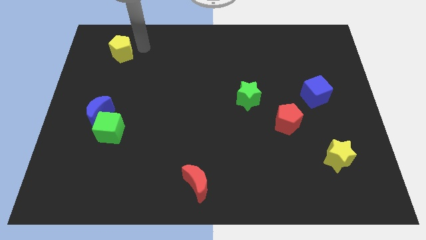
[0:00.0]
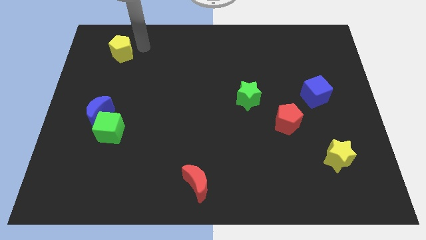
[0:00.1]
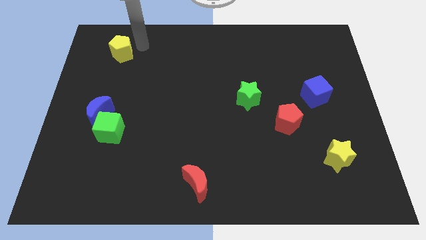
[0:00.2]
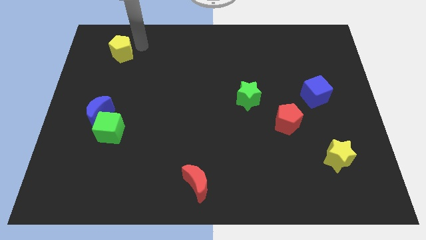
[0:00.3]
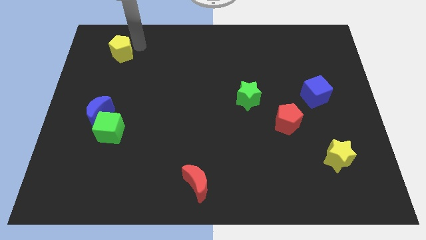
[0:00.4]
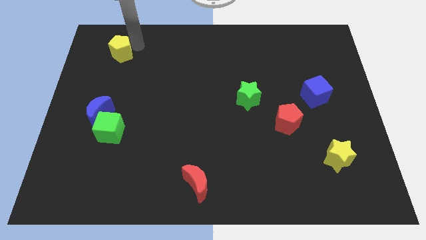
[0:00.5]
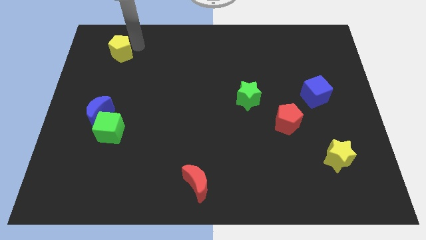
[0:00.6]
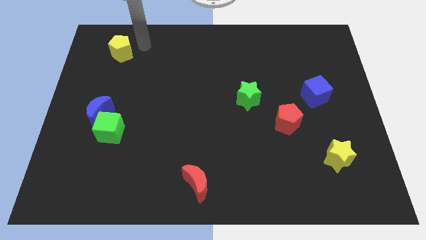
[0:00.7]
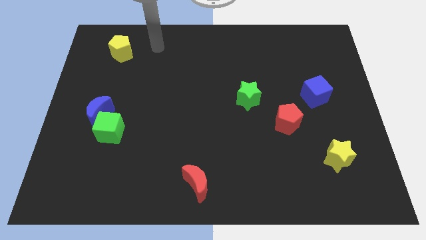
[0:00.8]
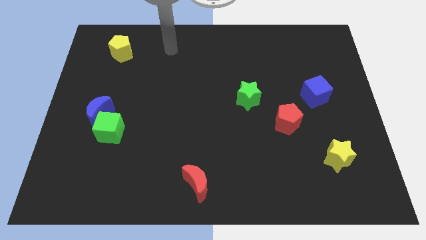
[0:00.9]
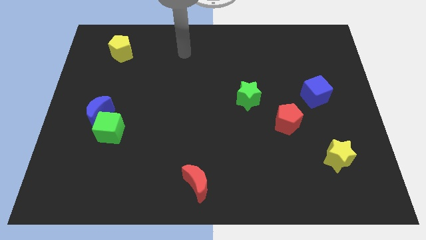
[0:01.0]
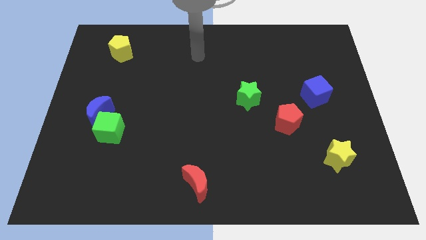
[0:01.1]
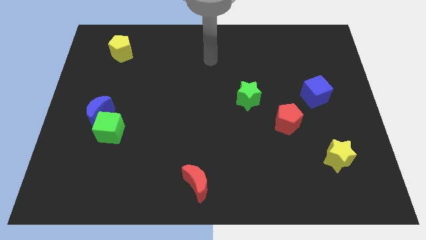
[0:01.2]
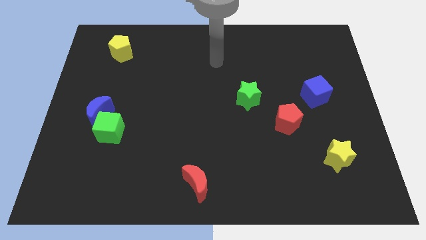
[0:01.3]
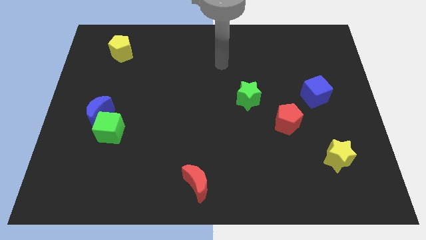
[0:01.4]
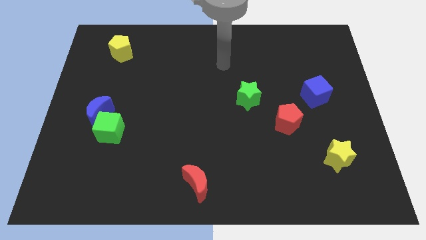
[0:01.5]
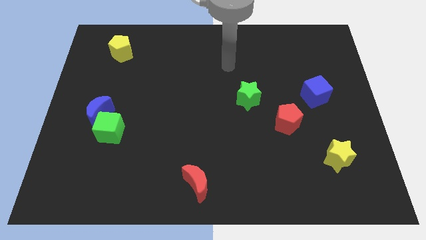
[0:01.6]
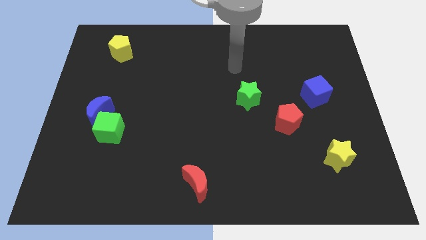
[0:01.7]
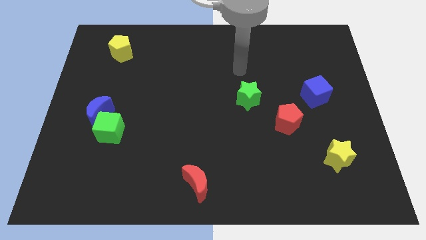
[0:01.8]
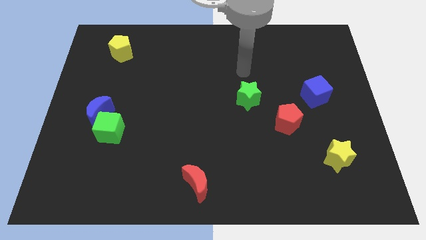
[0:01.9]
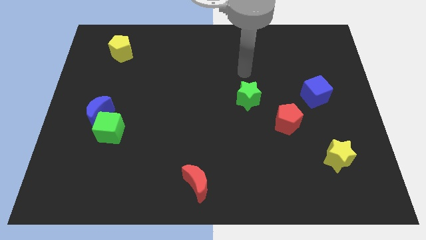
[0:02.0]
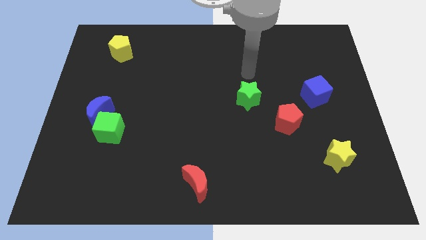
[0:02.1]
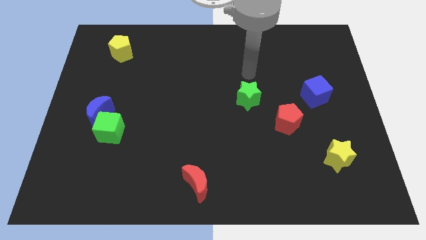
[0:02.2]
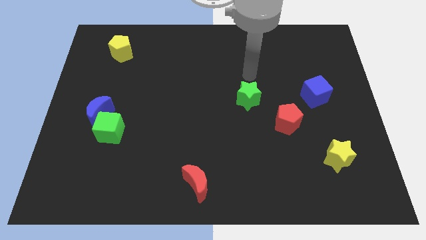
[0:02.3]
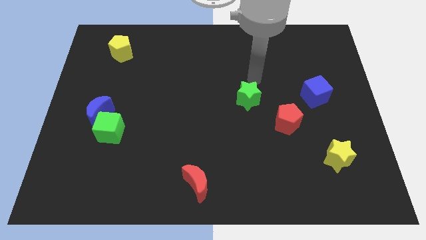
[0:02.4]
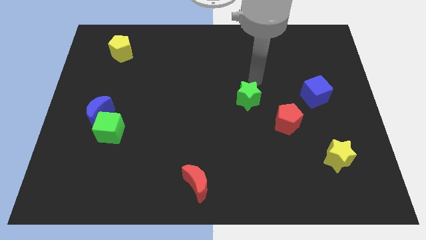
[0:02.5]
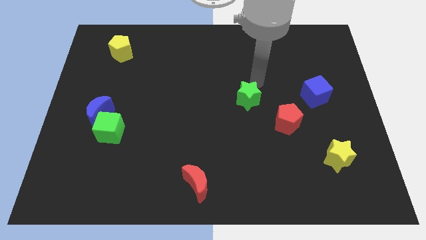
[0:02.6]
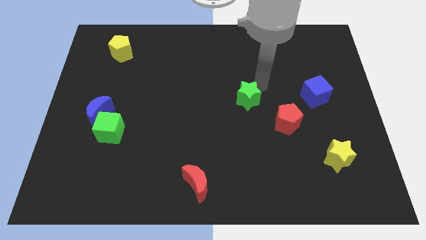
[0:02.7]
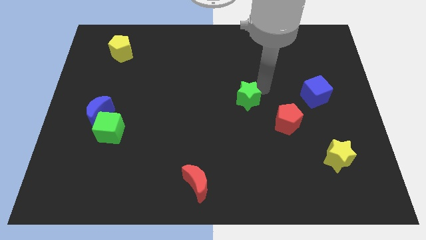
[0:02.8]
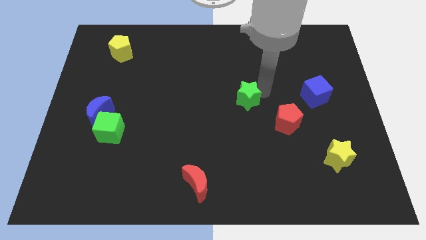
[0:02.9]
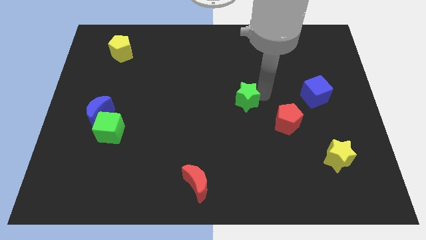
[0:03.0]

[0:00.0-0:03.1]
point the arm to the right of the green star

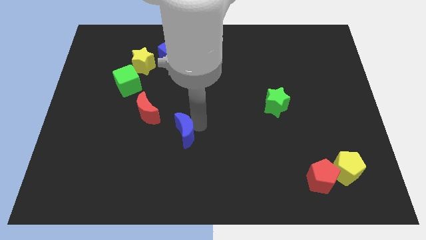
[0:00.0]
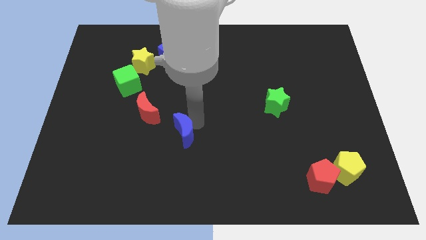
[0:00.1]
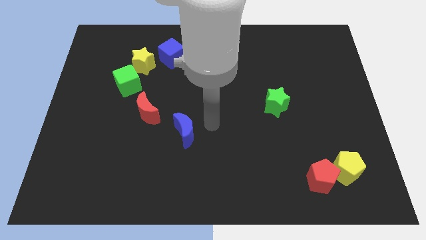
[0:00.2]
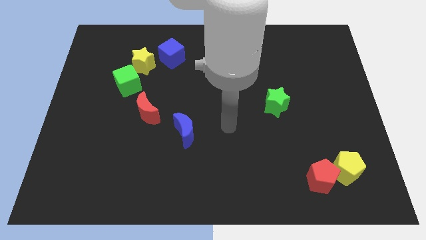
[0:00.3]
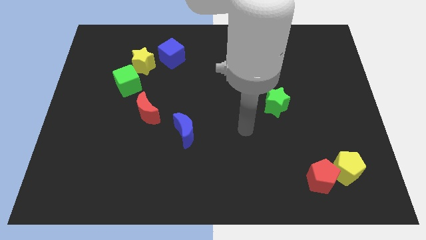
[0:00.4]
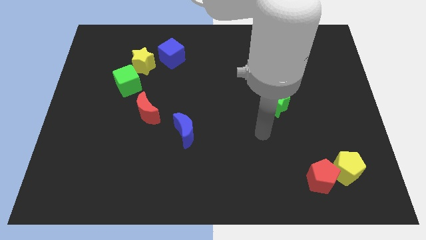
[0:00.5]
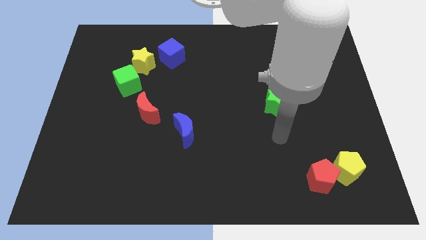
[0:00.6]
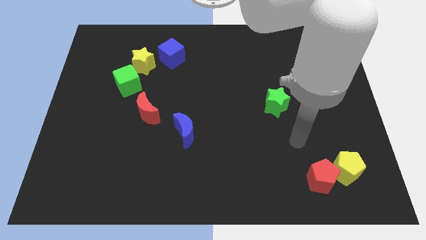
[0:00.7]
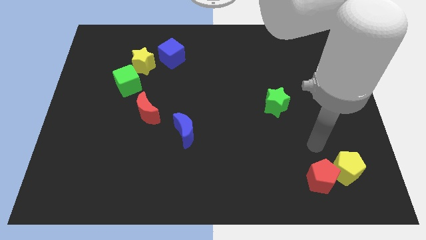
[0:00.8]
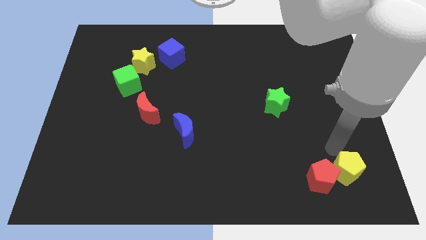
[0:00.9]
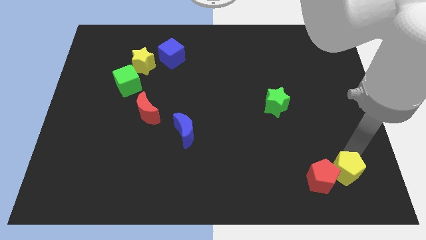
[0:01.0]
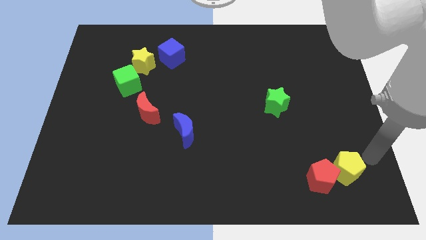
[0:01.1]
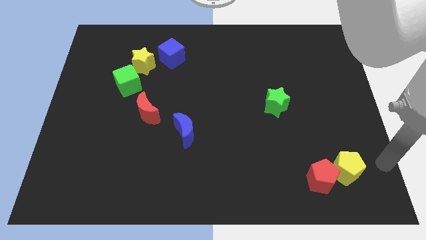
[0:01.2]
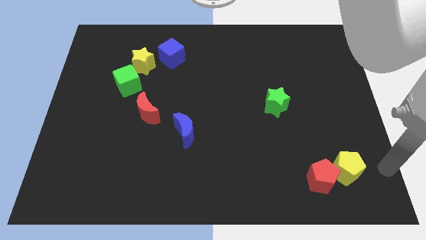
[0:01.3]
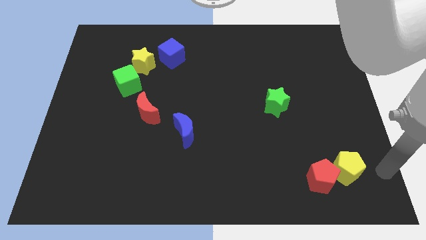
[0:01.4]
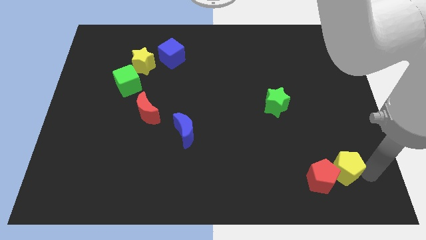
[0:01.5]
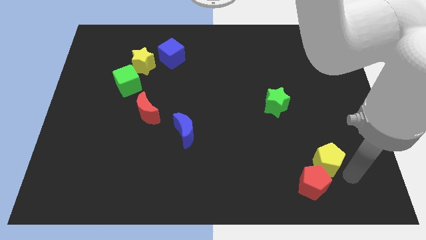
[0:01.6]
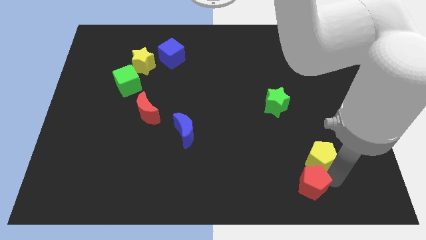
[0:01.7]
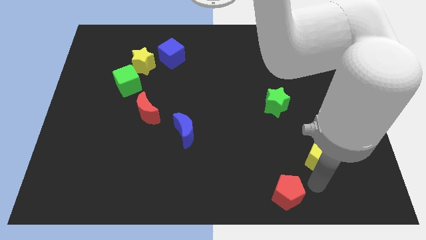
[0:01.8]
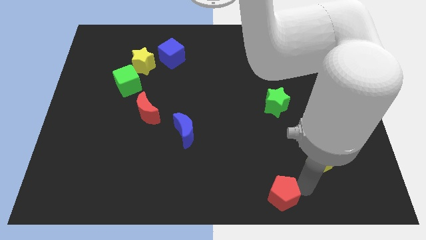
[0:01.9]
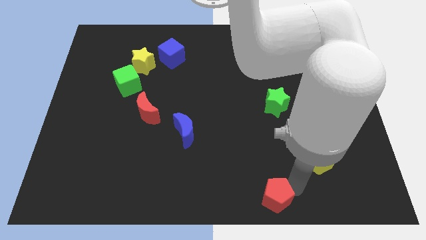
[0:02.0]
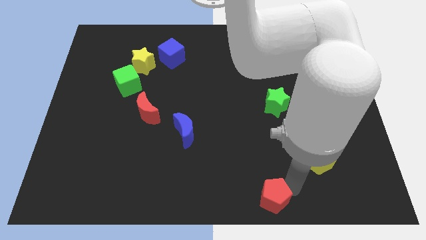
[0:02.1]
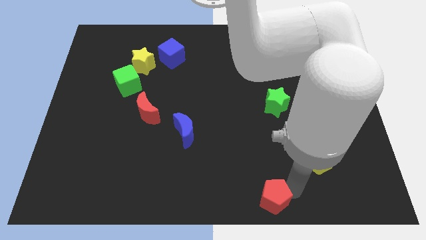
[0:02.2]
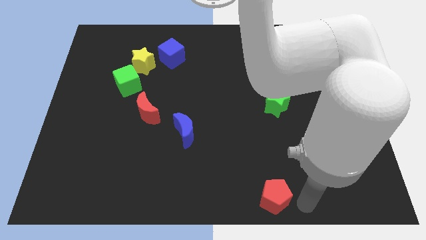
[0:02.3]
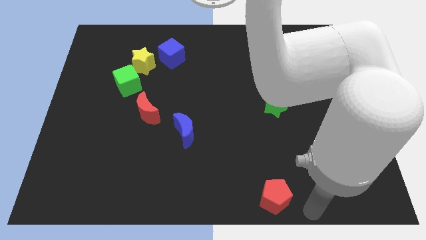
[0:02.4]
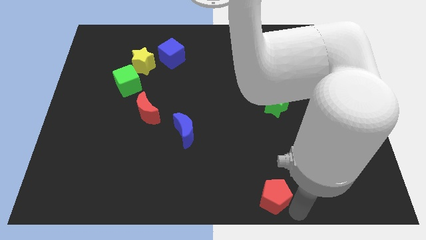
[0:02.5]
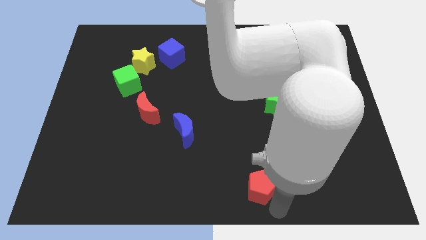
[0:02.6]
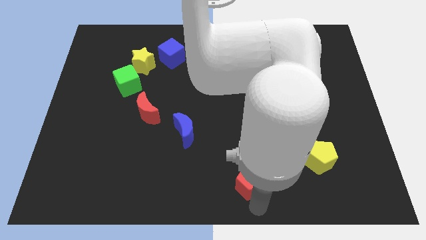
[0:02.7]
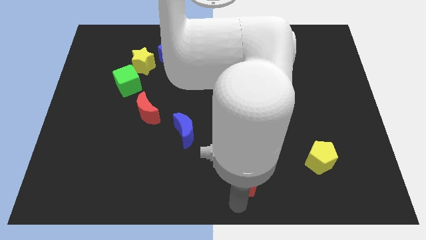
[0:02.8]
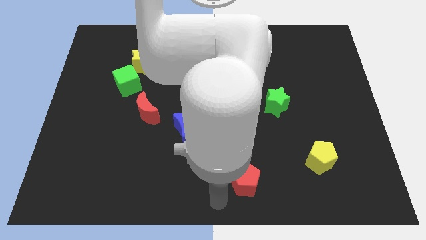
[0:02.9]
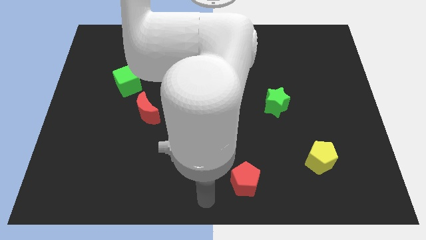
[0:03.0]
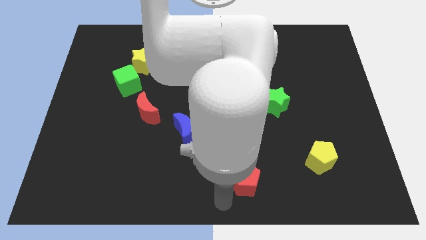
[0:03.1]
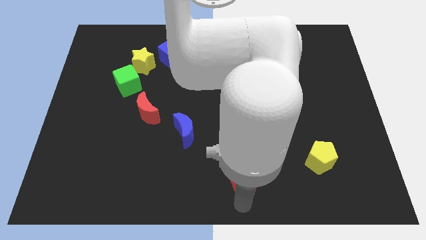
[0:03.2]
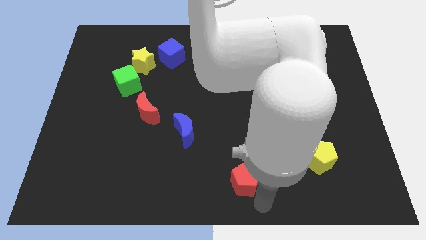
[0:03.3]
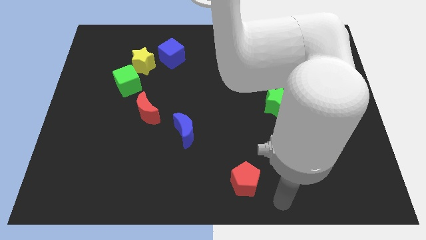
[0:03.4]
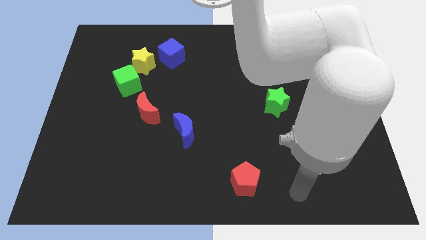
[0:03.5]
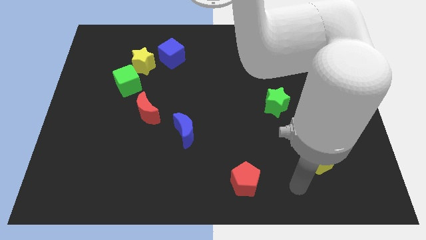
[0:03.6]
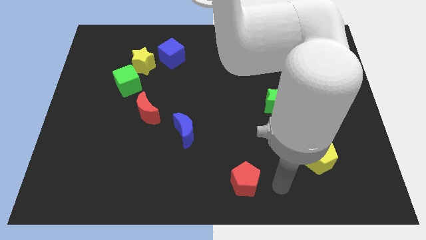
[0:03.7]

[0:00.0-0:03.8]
push the red pentagon to the bottom right of the blue crescent

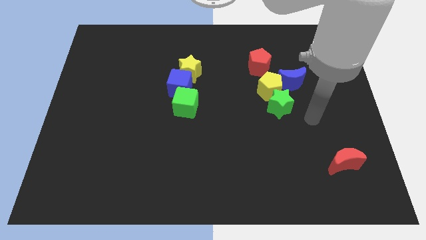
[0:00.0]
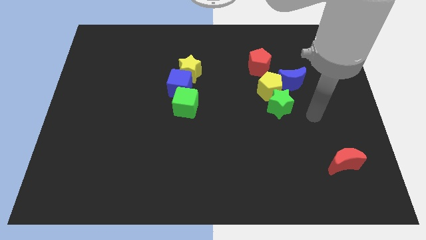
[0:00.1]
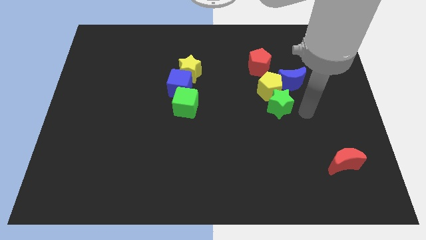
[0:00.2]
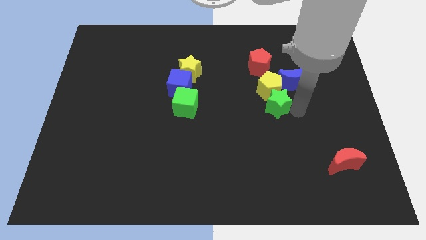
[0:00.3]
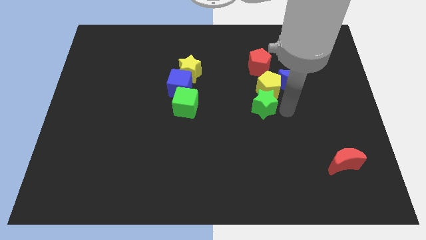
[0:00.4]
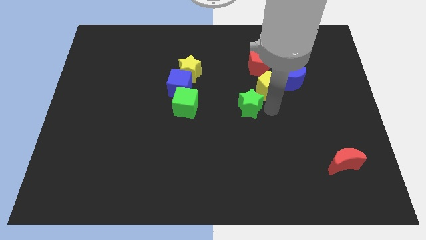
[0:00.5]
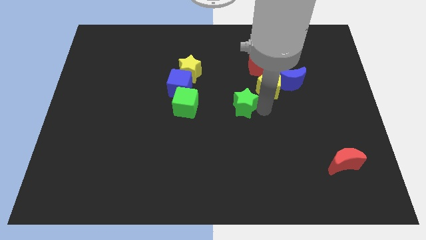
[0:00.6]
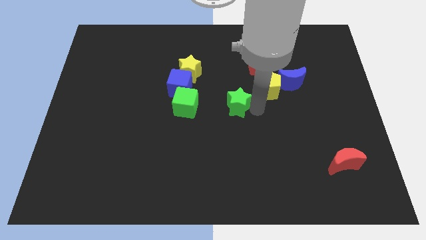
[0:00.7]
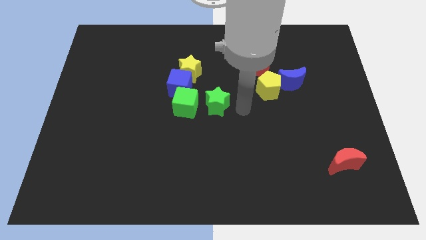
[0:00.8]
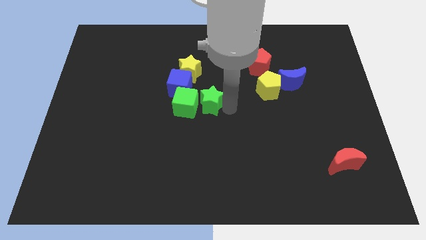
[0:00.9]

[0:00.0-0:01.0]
move green star to the right of green cube

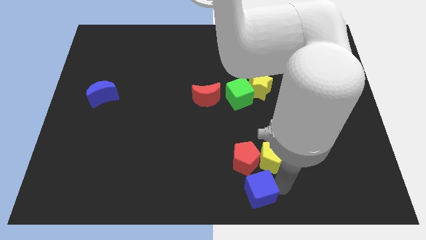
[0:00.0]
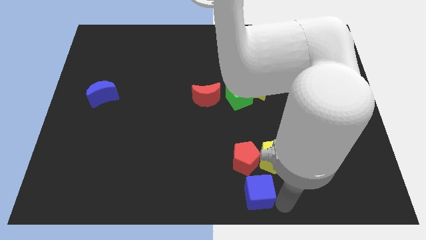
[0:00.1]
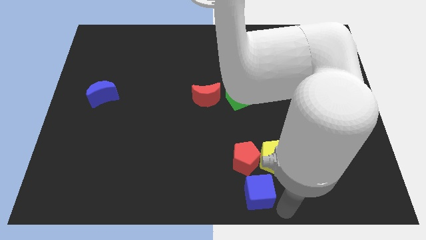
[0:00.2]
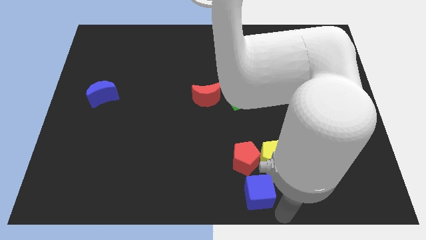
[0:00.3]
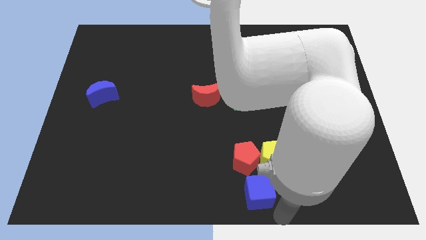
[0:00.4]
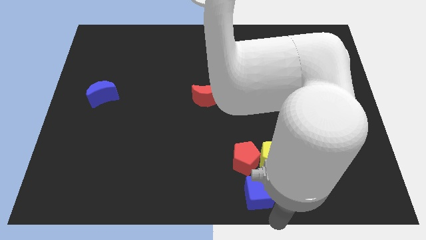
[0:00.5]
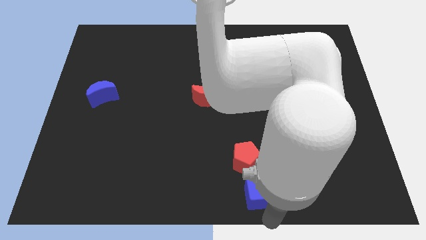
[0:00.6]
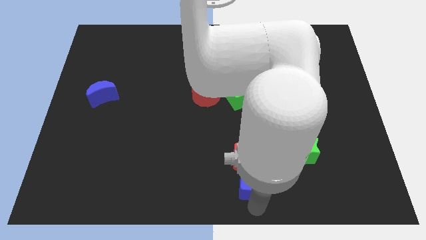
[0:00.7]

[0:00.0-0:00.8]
push blue cube below red pentagon

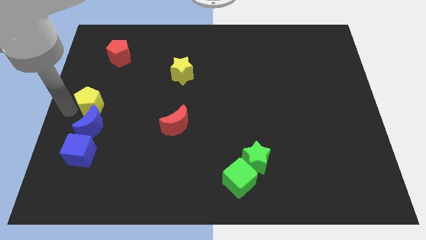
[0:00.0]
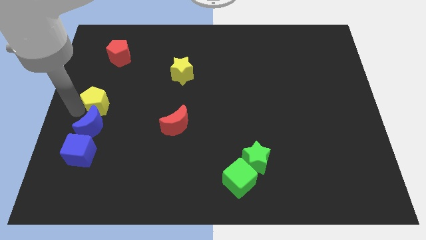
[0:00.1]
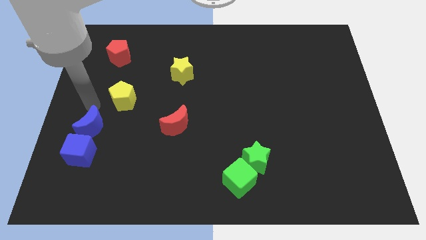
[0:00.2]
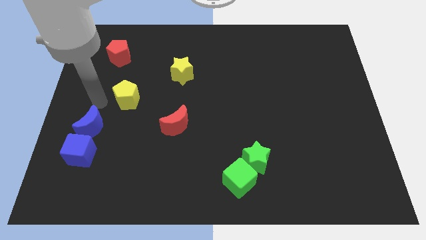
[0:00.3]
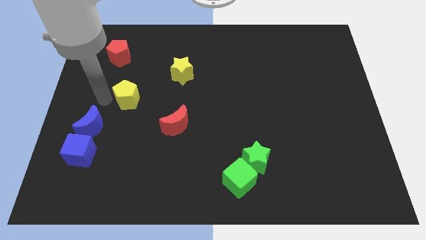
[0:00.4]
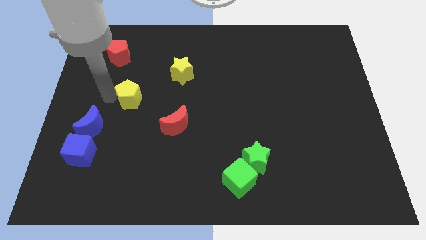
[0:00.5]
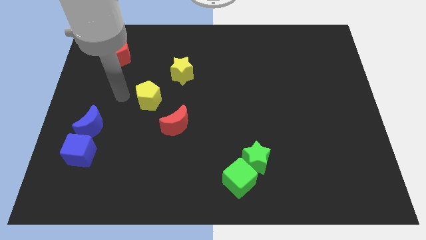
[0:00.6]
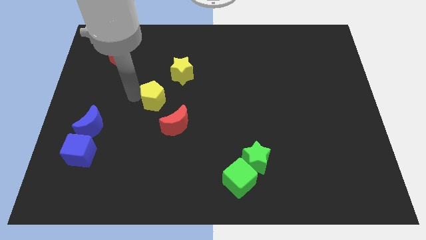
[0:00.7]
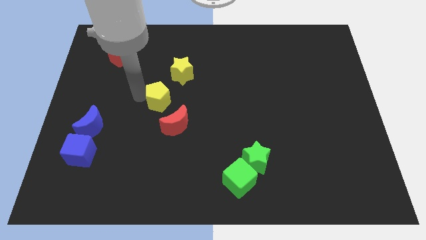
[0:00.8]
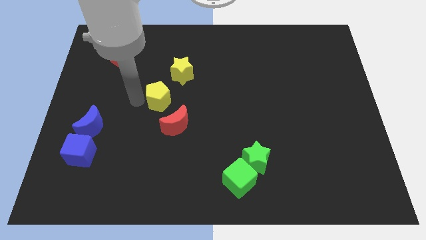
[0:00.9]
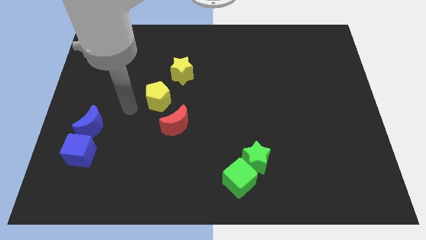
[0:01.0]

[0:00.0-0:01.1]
move yellow pentagon away from the blue moon
